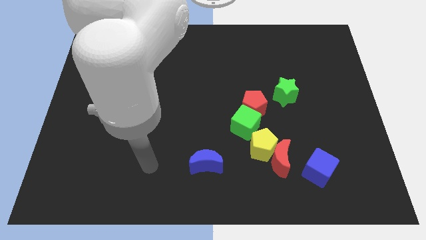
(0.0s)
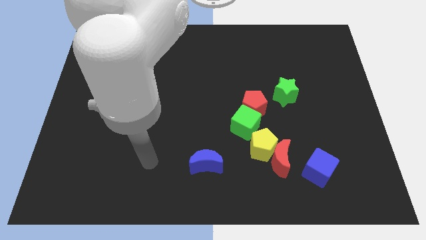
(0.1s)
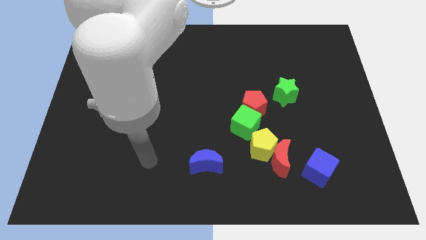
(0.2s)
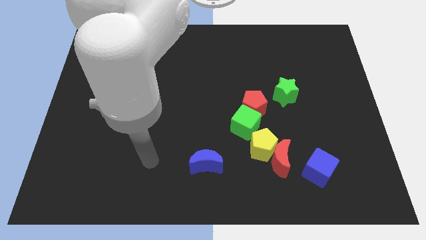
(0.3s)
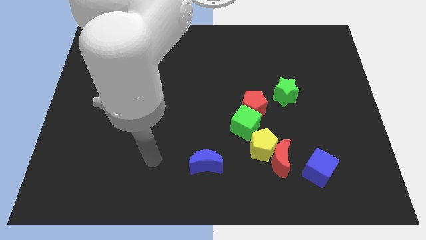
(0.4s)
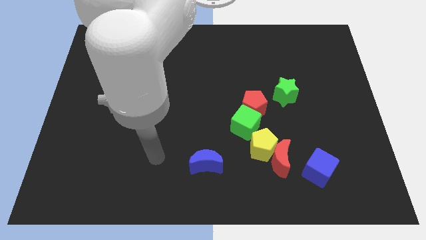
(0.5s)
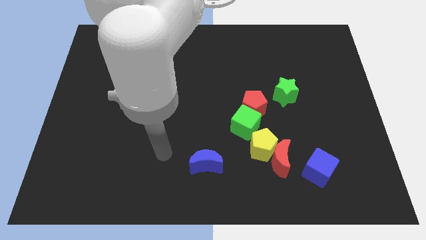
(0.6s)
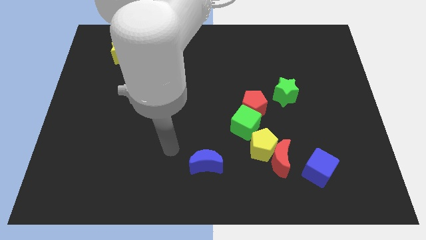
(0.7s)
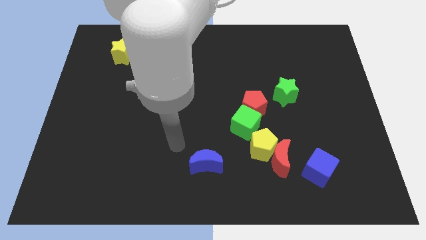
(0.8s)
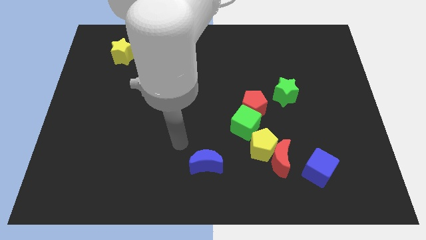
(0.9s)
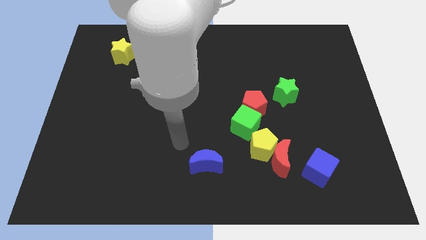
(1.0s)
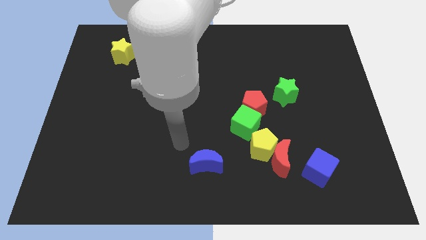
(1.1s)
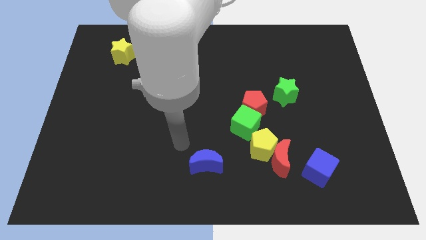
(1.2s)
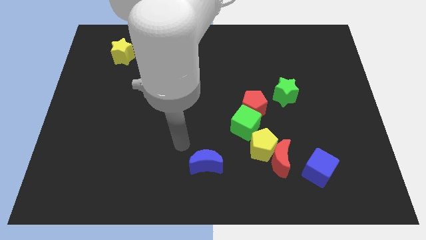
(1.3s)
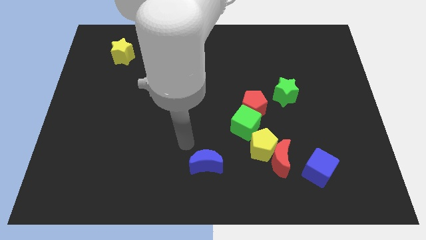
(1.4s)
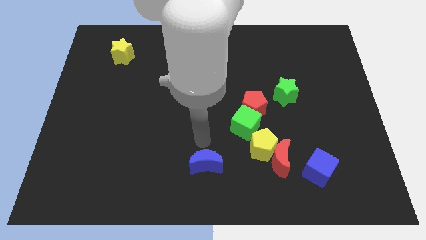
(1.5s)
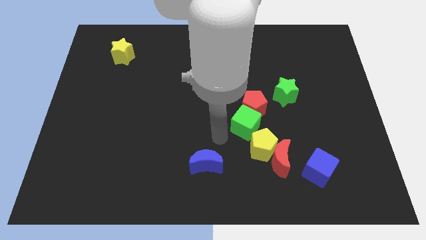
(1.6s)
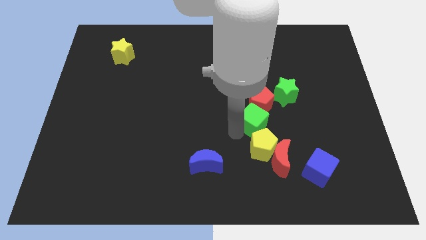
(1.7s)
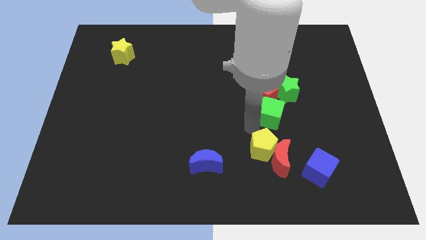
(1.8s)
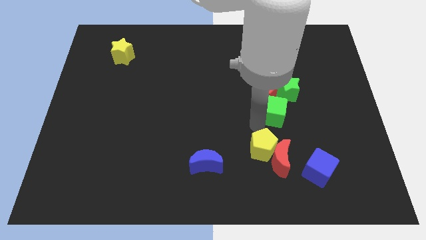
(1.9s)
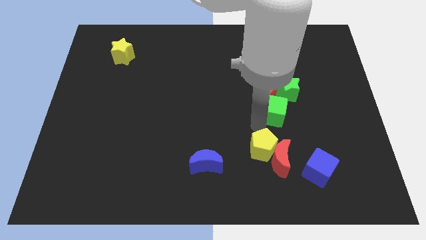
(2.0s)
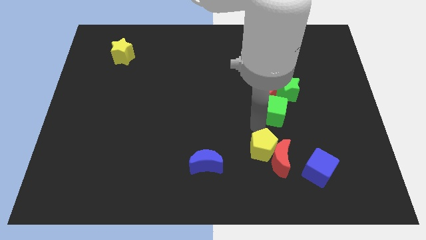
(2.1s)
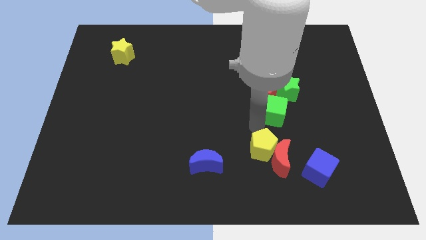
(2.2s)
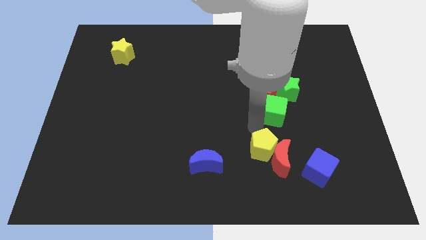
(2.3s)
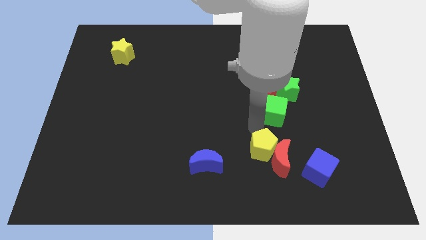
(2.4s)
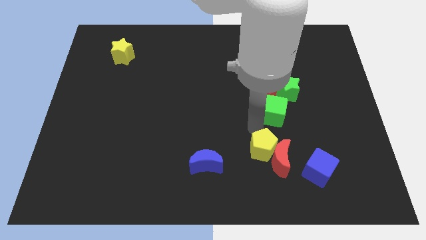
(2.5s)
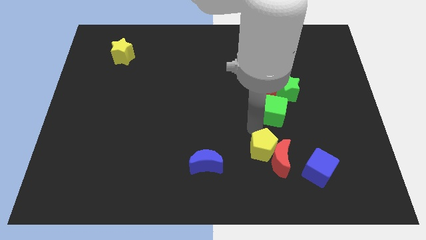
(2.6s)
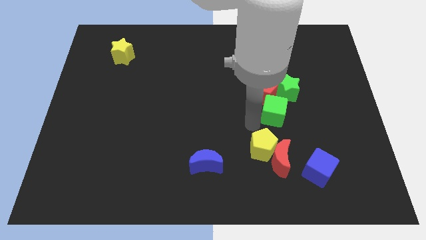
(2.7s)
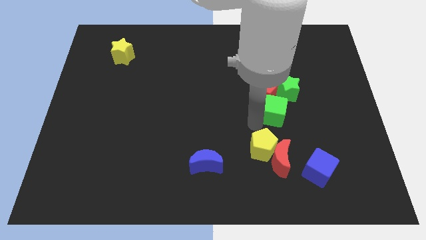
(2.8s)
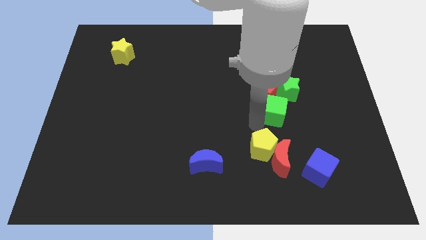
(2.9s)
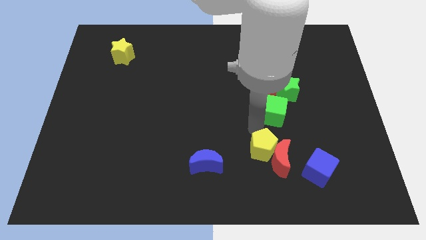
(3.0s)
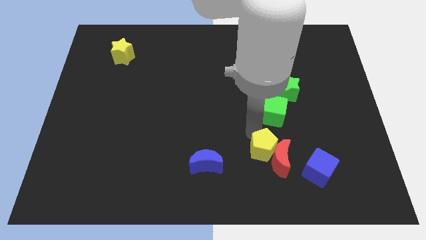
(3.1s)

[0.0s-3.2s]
push green cube above yellow pentagon

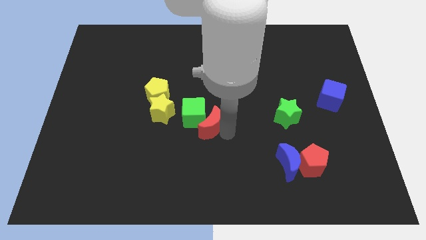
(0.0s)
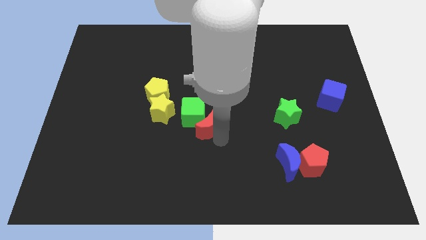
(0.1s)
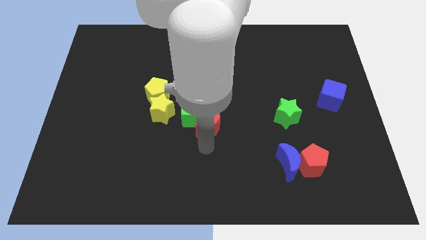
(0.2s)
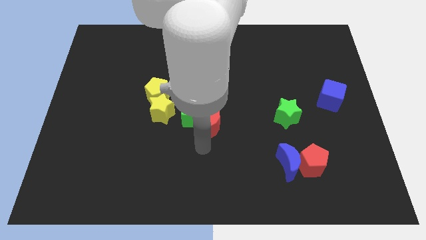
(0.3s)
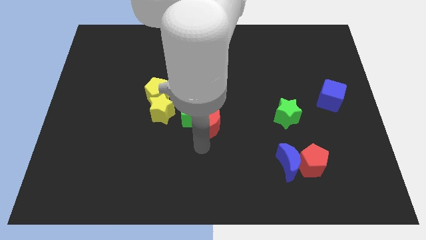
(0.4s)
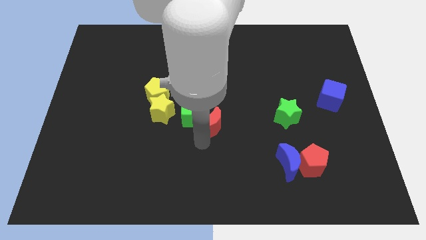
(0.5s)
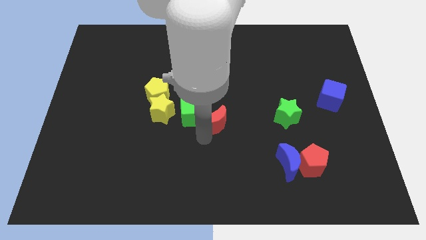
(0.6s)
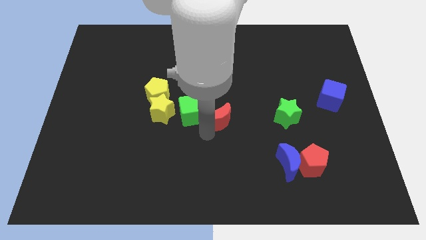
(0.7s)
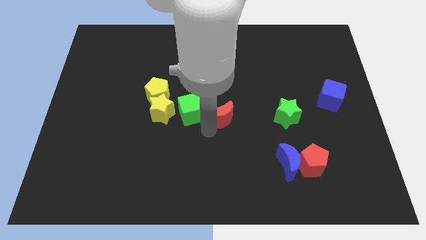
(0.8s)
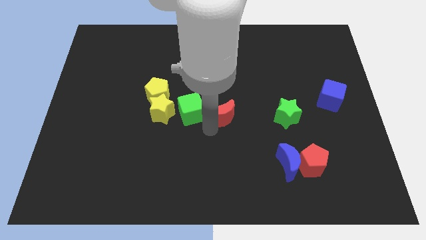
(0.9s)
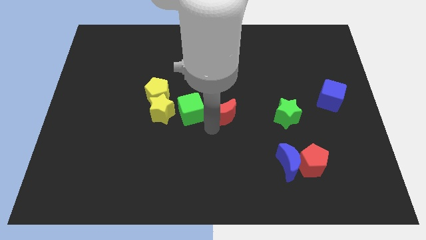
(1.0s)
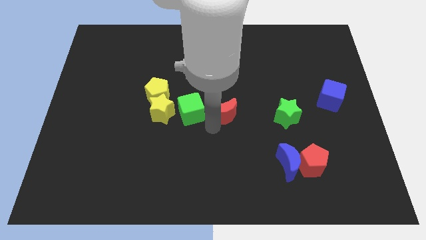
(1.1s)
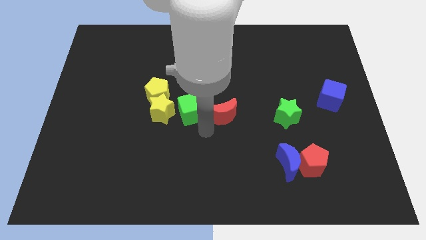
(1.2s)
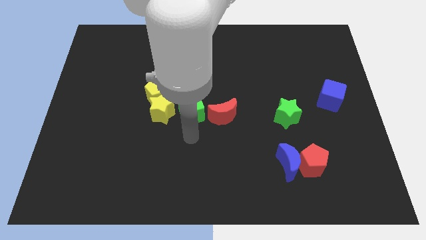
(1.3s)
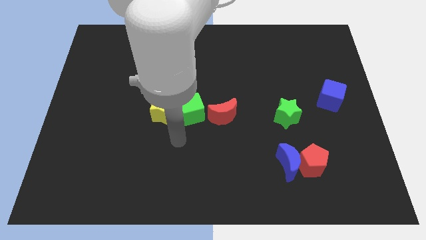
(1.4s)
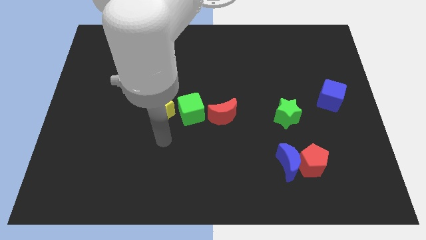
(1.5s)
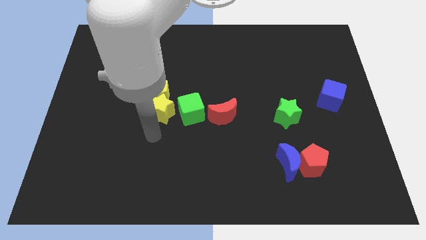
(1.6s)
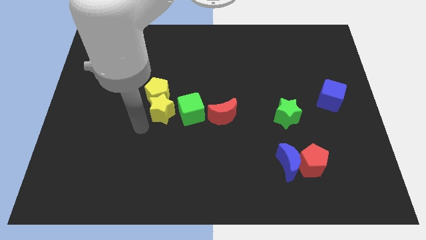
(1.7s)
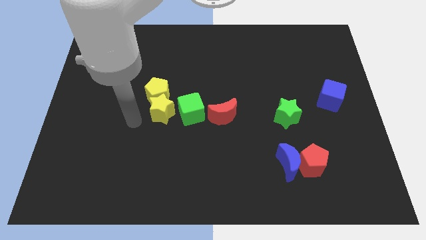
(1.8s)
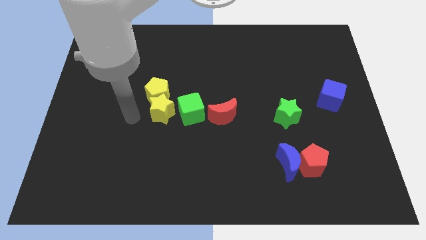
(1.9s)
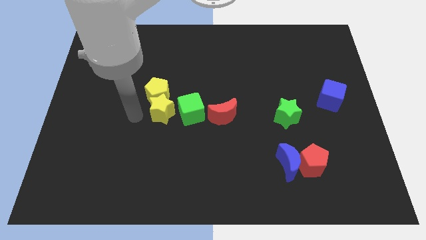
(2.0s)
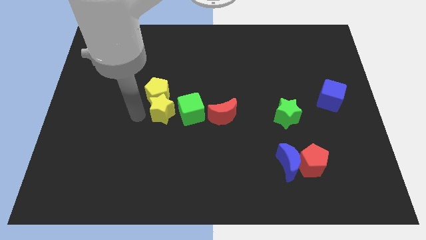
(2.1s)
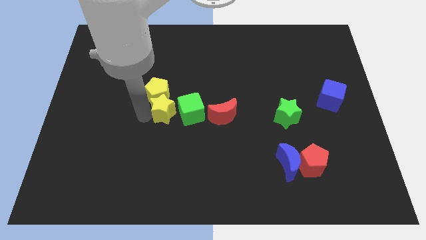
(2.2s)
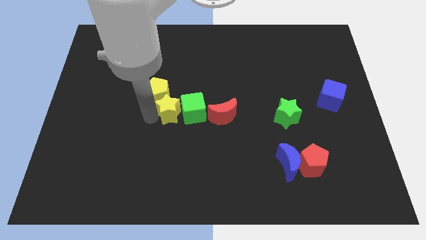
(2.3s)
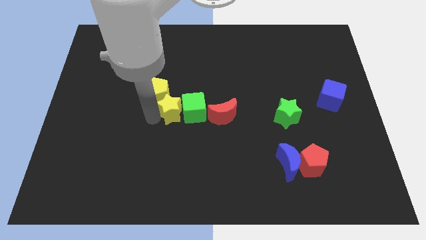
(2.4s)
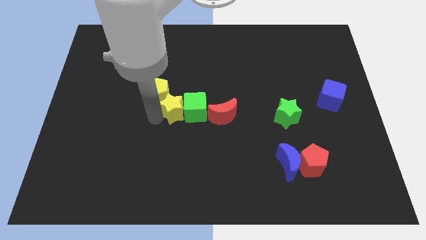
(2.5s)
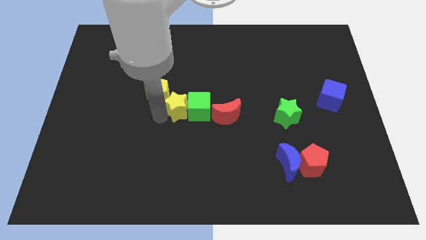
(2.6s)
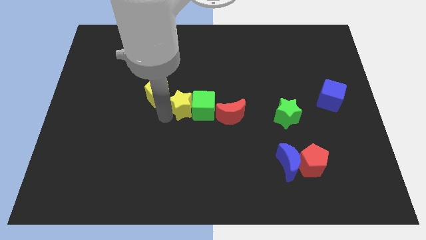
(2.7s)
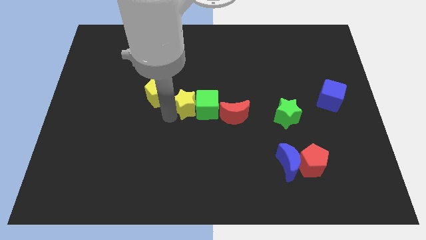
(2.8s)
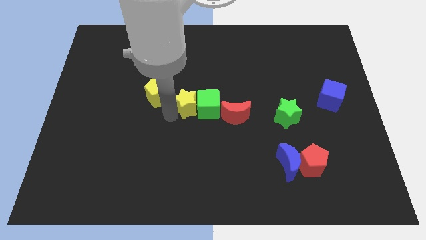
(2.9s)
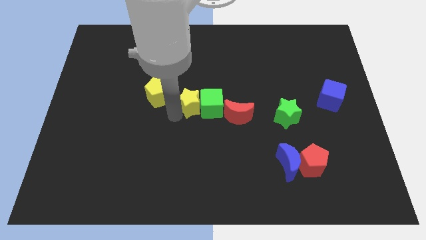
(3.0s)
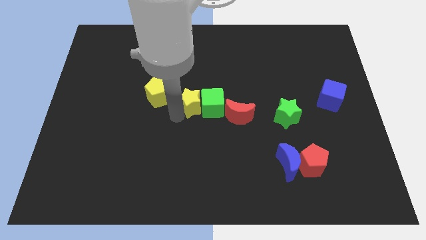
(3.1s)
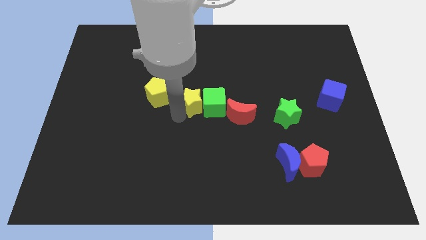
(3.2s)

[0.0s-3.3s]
put the yellow star into the green cube

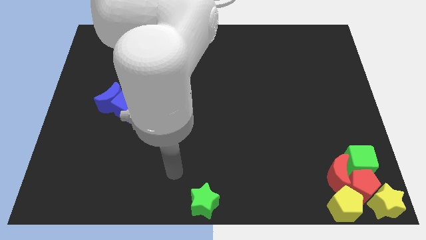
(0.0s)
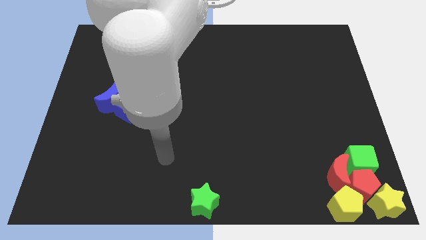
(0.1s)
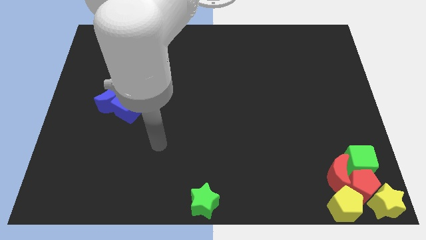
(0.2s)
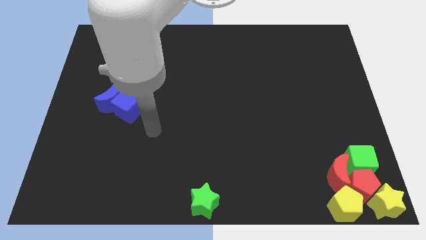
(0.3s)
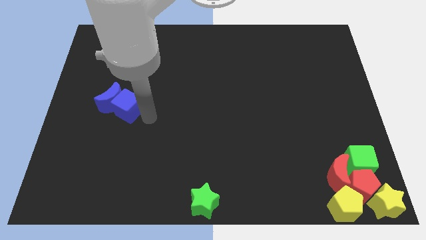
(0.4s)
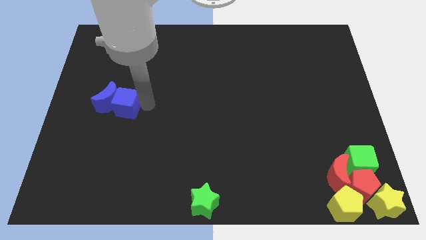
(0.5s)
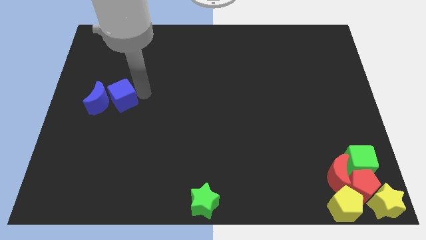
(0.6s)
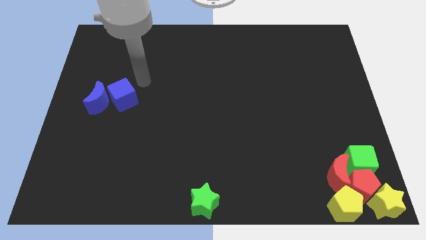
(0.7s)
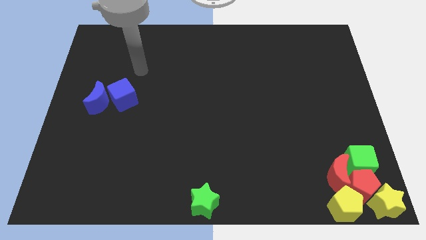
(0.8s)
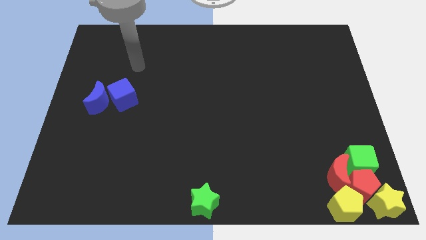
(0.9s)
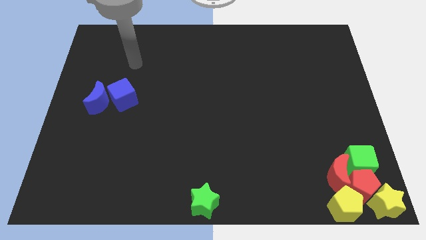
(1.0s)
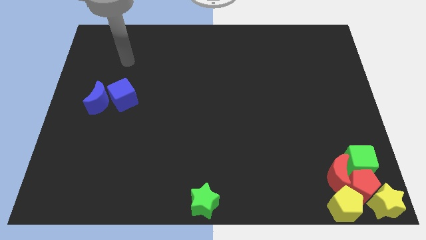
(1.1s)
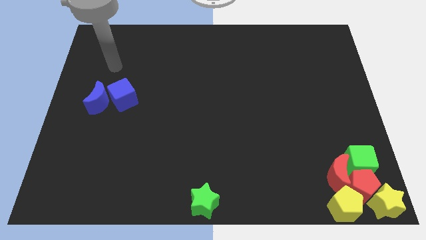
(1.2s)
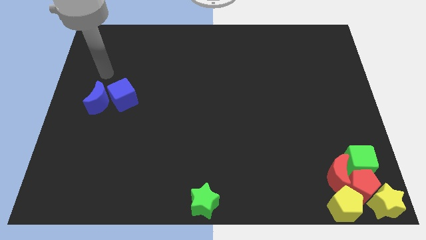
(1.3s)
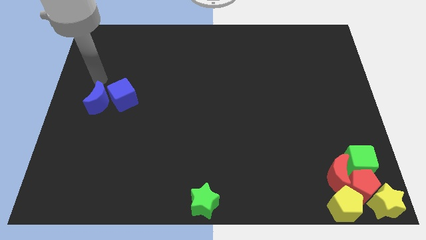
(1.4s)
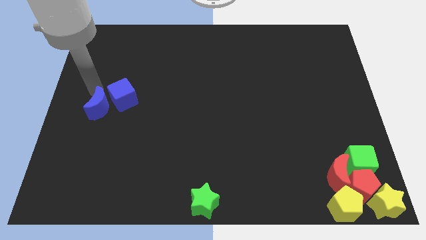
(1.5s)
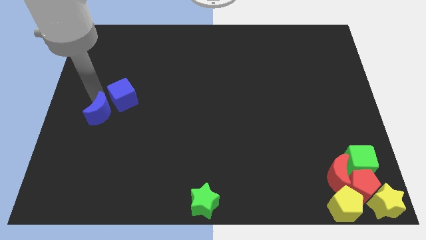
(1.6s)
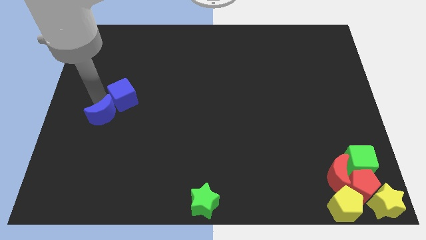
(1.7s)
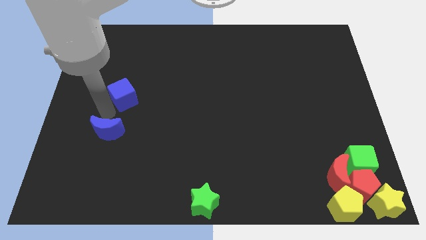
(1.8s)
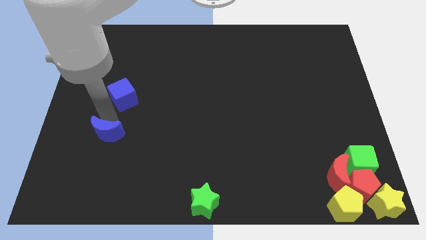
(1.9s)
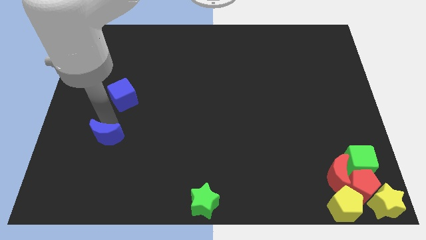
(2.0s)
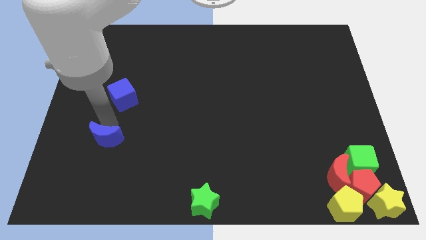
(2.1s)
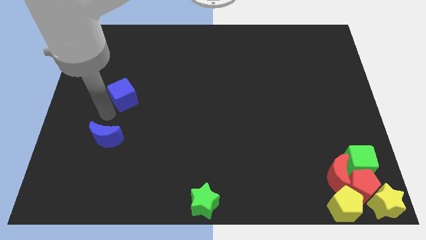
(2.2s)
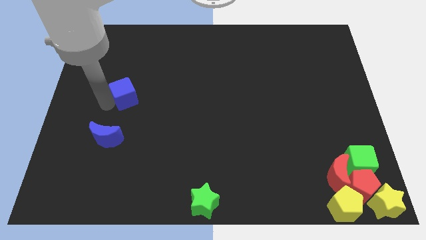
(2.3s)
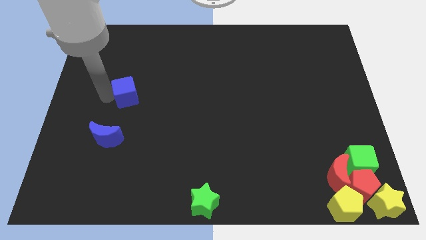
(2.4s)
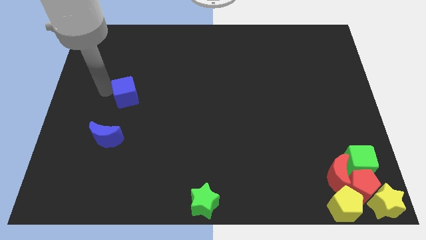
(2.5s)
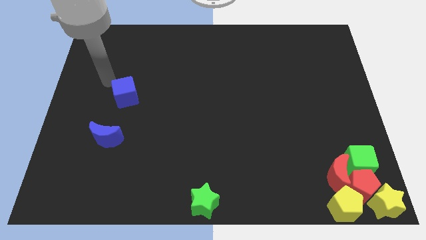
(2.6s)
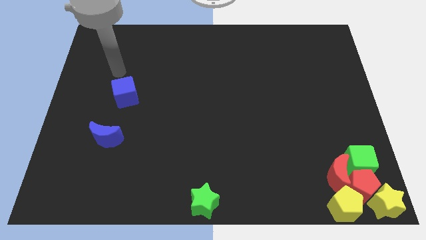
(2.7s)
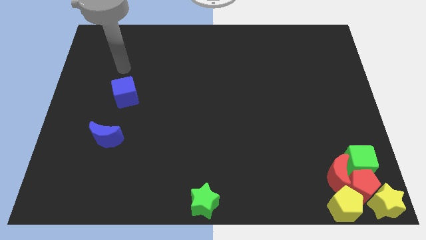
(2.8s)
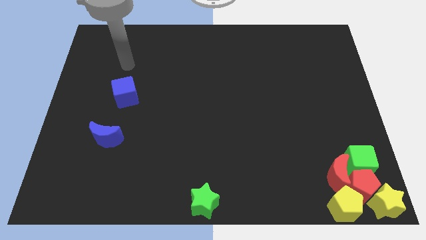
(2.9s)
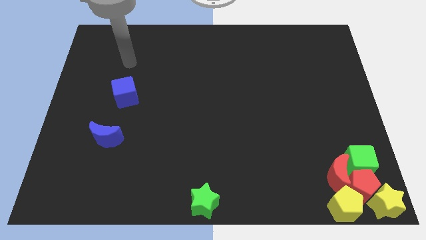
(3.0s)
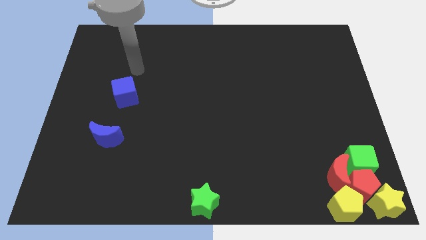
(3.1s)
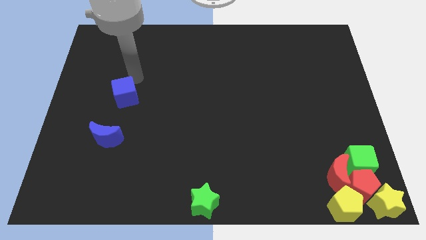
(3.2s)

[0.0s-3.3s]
separate the blue moon from the blue cube
